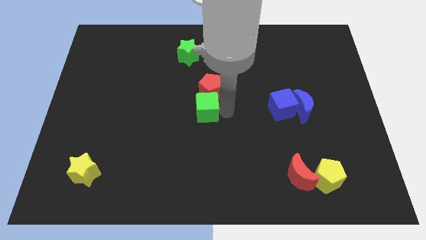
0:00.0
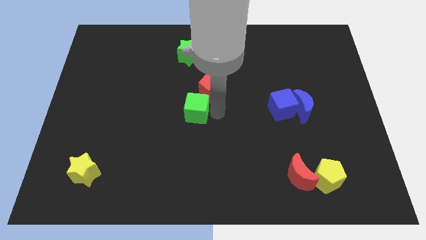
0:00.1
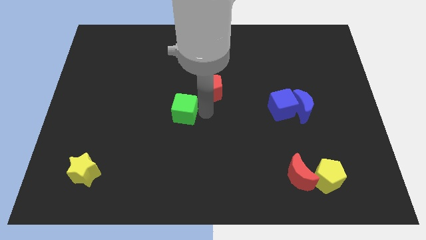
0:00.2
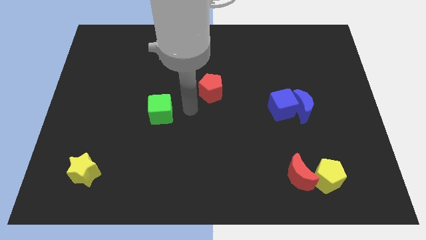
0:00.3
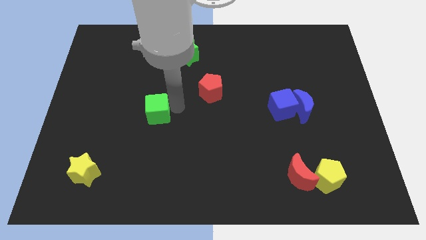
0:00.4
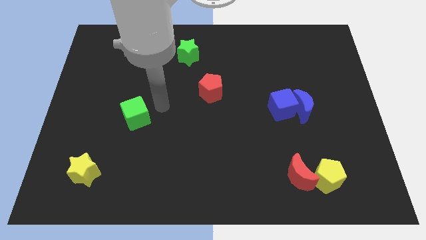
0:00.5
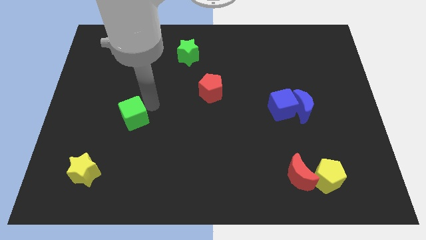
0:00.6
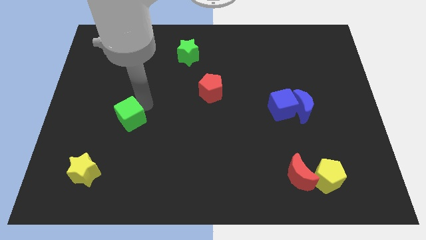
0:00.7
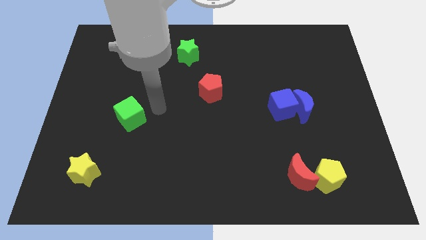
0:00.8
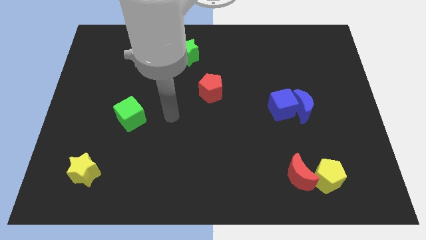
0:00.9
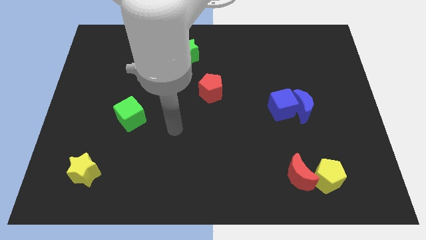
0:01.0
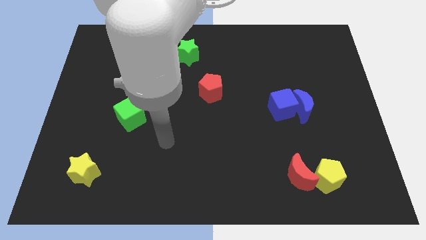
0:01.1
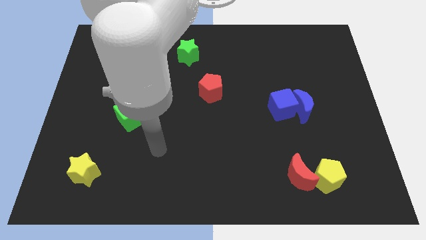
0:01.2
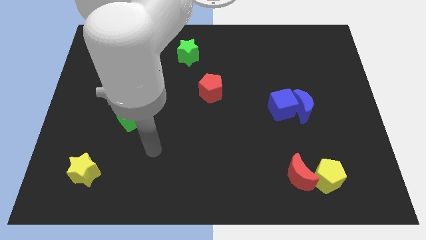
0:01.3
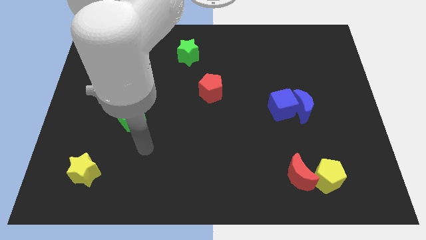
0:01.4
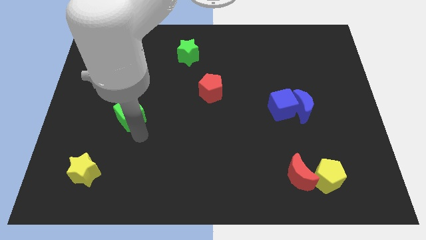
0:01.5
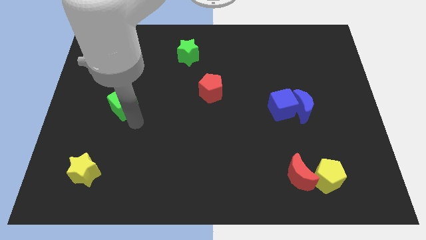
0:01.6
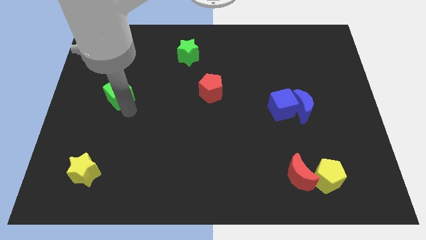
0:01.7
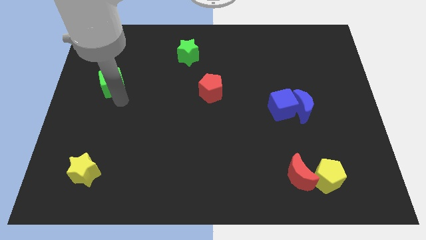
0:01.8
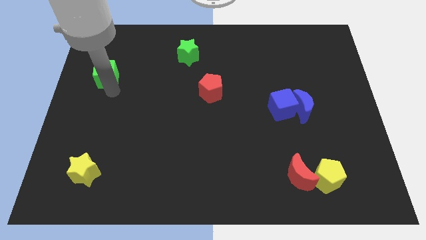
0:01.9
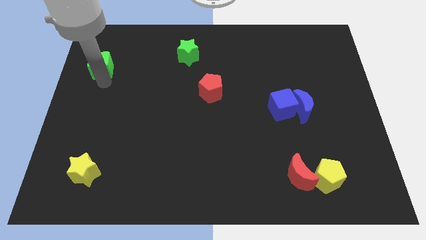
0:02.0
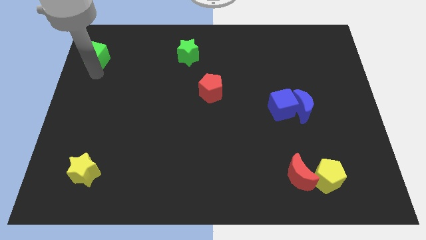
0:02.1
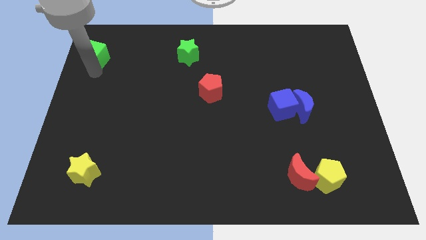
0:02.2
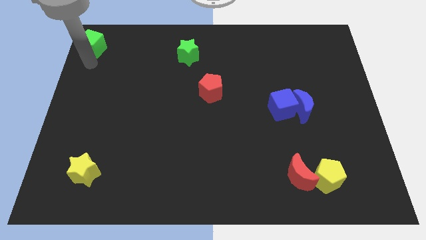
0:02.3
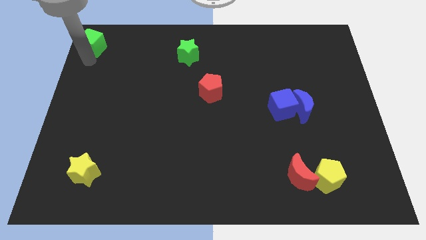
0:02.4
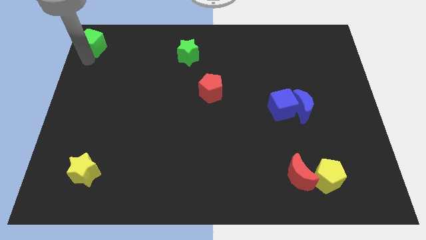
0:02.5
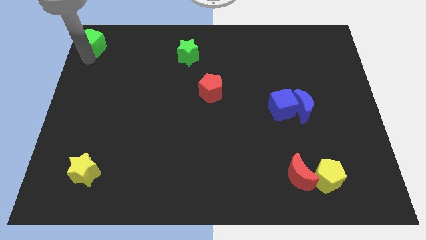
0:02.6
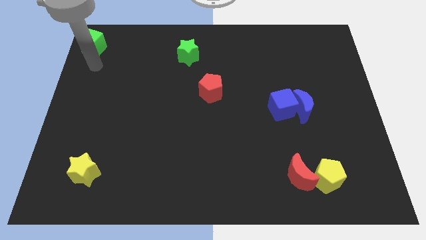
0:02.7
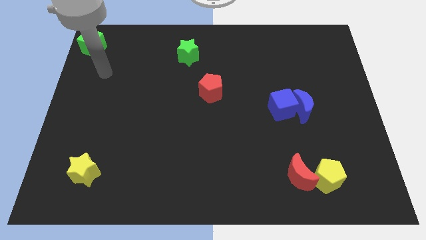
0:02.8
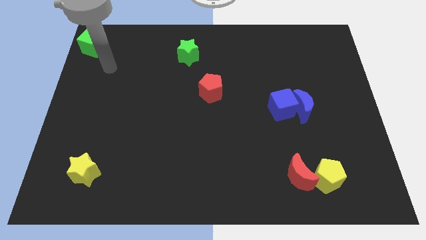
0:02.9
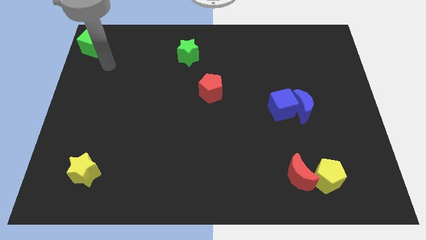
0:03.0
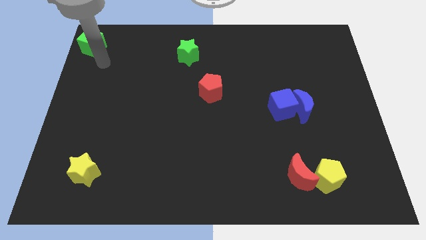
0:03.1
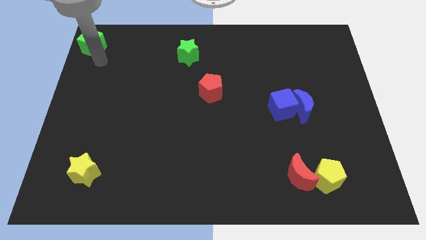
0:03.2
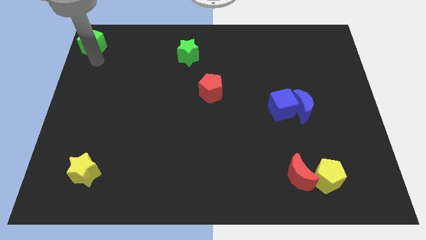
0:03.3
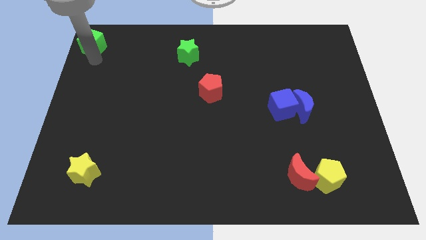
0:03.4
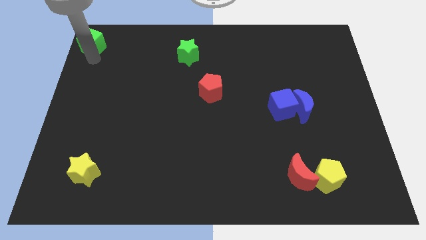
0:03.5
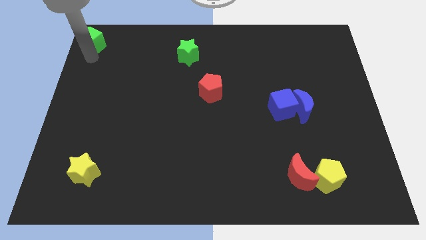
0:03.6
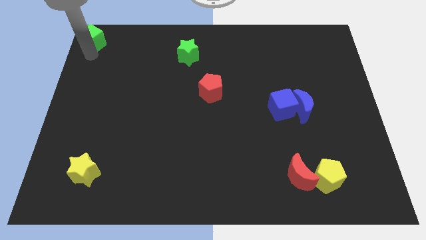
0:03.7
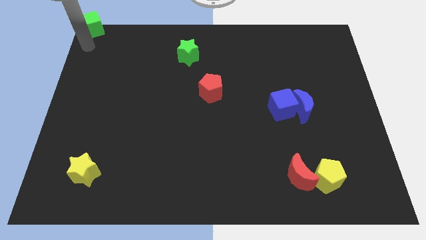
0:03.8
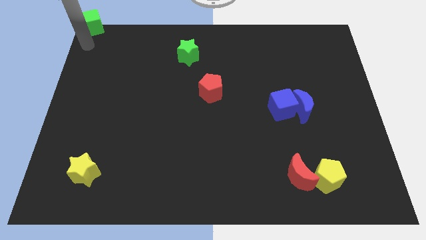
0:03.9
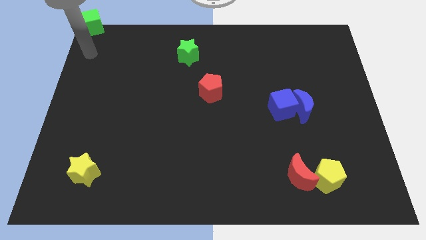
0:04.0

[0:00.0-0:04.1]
separate green cube from red pentagon

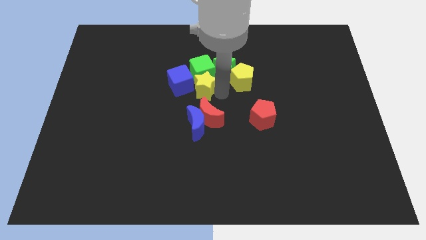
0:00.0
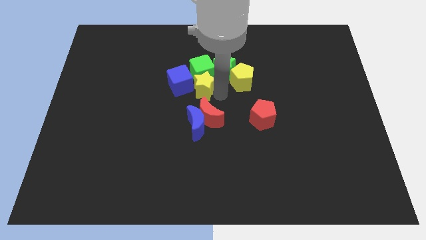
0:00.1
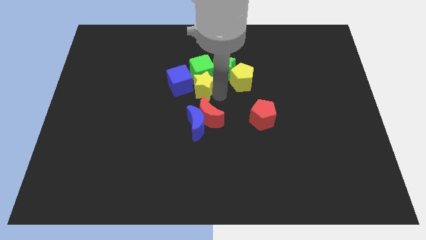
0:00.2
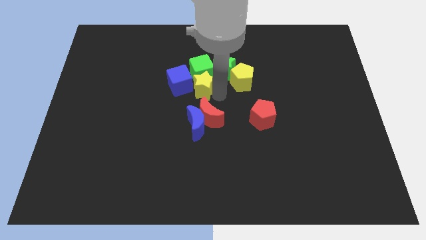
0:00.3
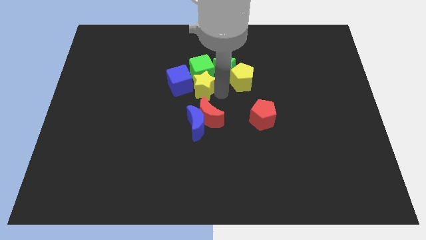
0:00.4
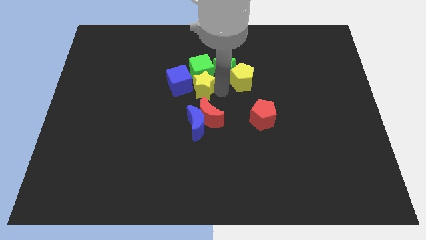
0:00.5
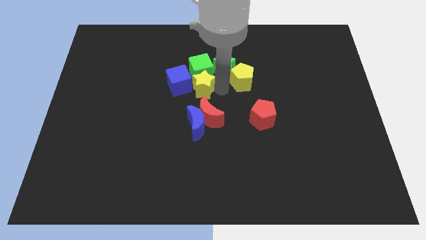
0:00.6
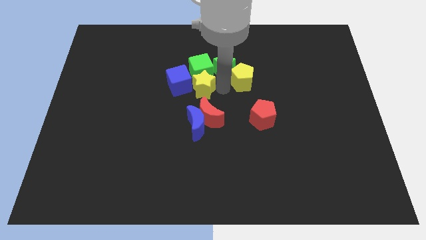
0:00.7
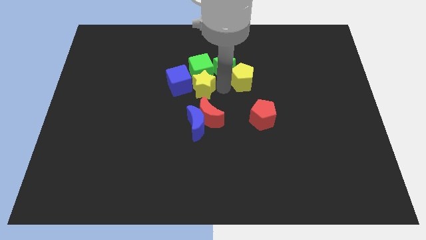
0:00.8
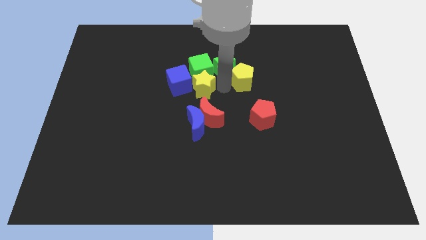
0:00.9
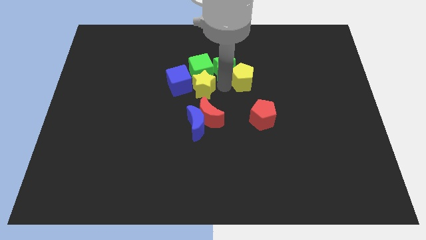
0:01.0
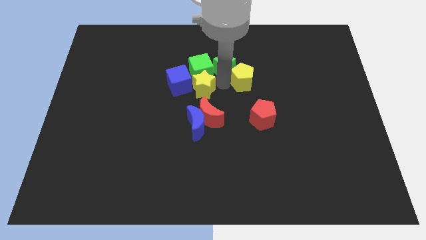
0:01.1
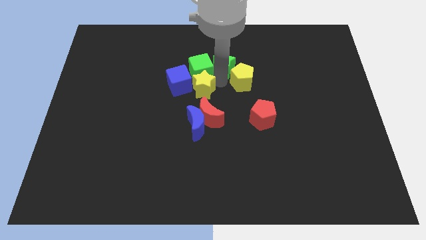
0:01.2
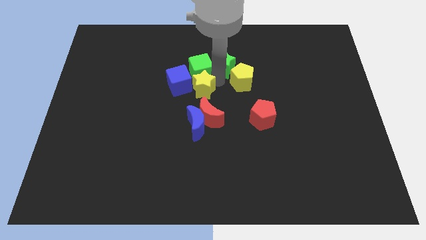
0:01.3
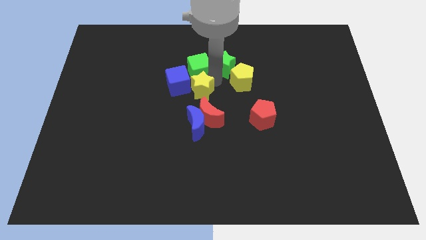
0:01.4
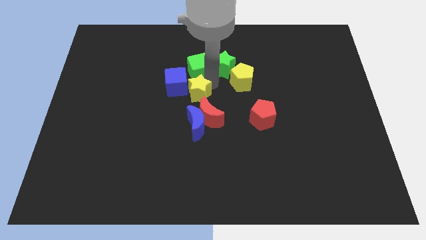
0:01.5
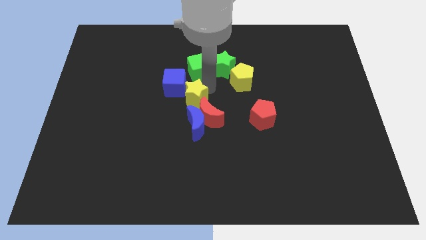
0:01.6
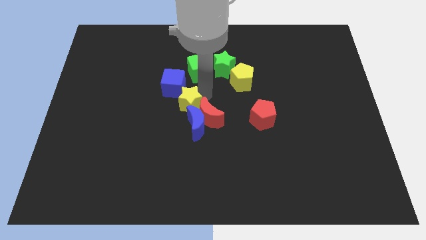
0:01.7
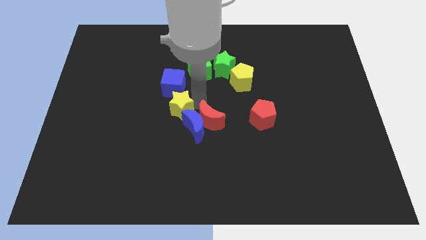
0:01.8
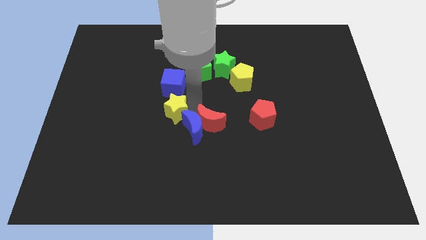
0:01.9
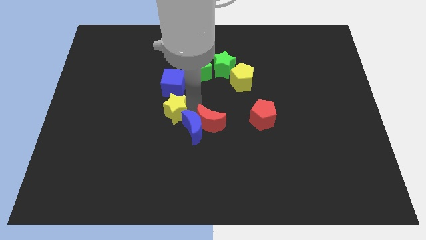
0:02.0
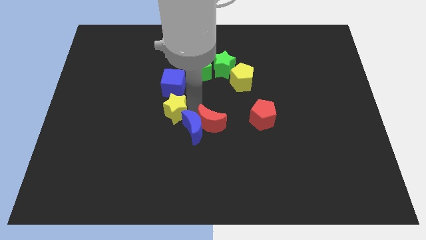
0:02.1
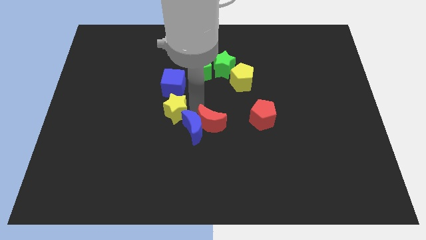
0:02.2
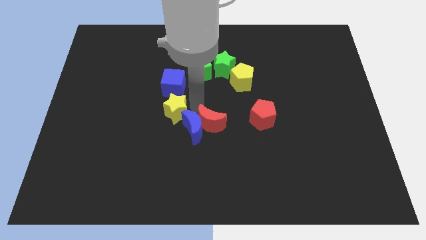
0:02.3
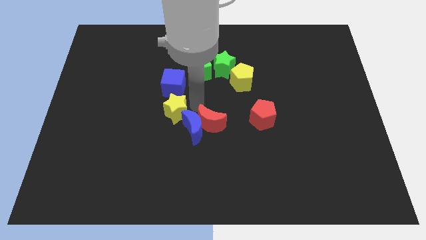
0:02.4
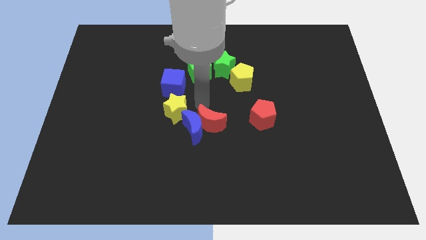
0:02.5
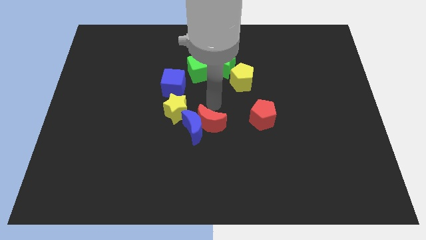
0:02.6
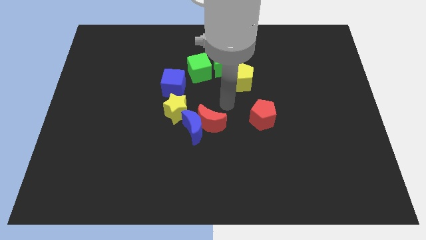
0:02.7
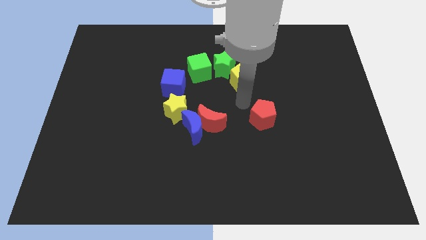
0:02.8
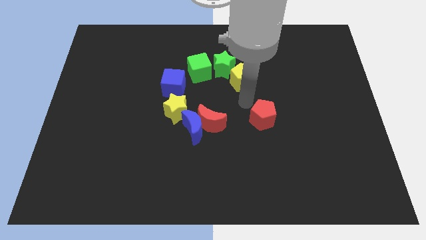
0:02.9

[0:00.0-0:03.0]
push the yellow star to the bottom of the blue cube

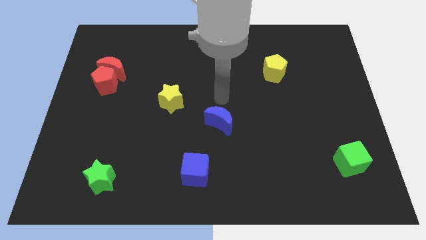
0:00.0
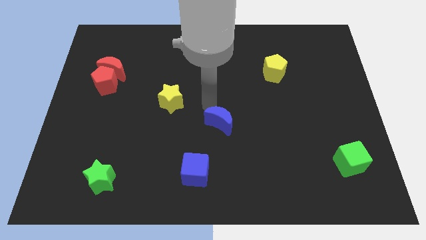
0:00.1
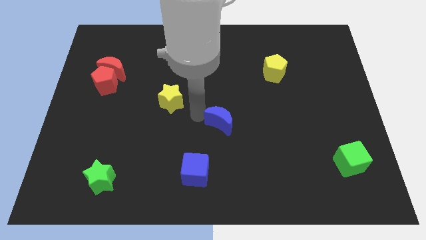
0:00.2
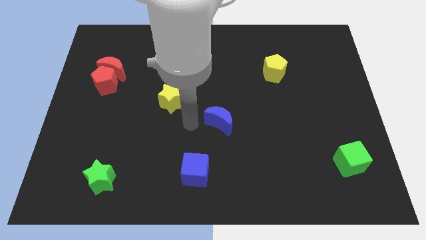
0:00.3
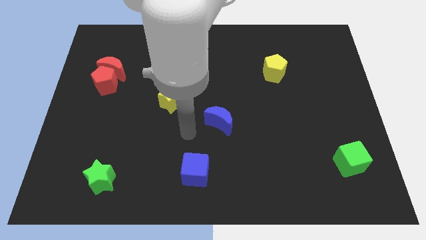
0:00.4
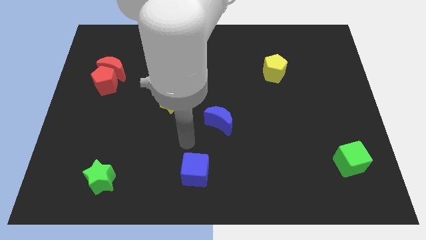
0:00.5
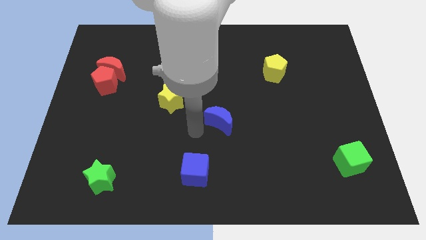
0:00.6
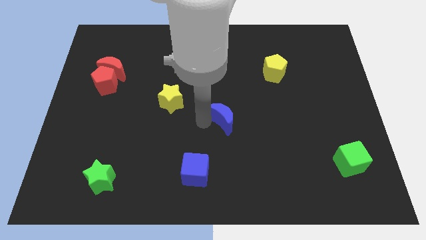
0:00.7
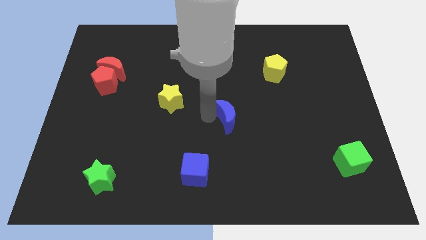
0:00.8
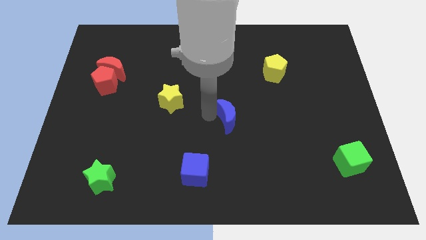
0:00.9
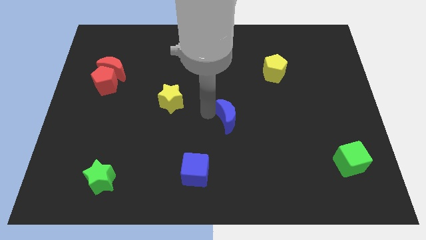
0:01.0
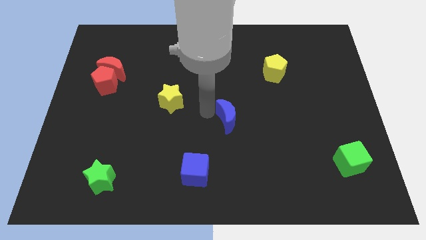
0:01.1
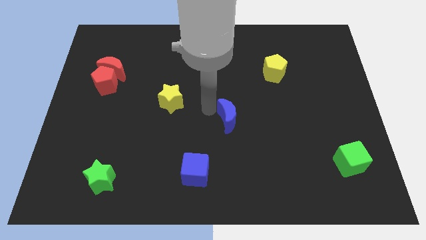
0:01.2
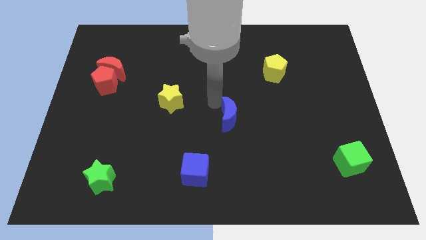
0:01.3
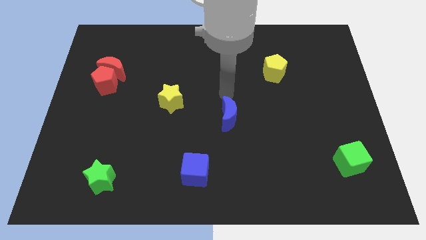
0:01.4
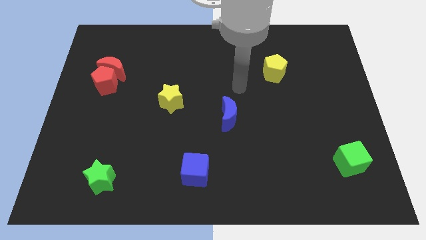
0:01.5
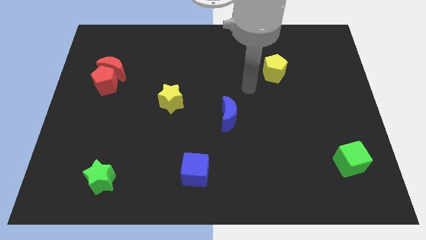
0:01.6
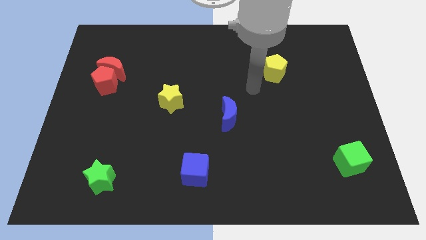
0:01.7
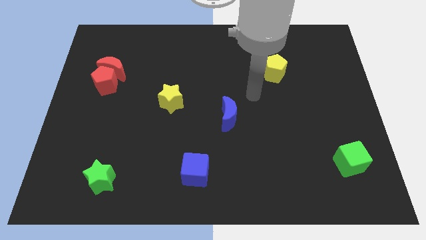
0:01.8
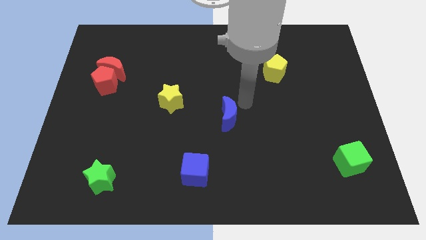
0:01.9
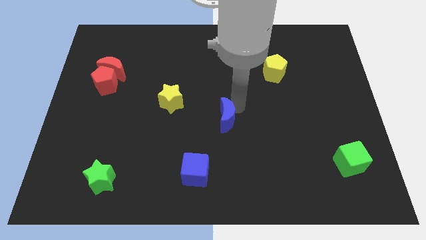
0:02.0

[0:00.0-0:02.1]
slightly adjust the blue crescent towards right
